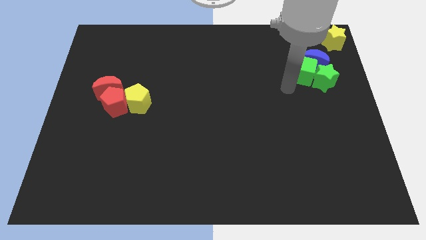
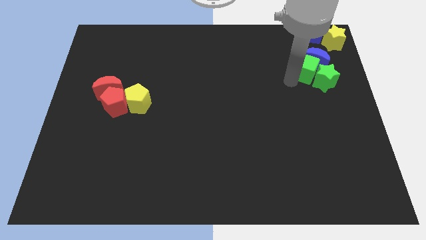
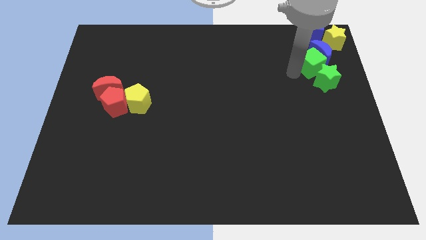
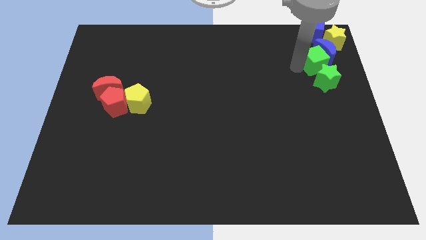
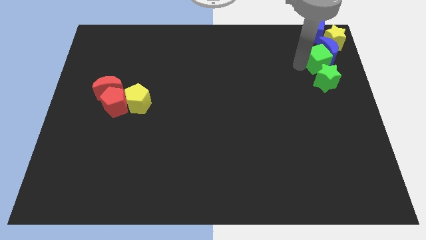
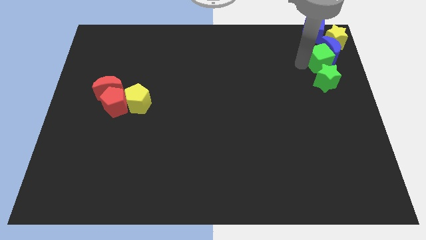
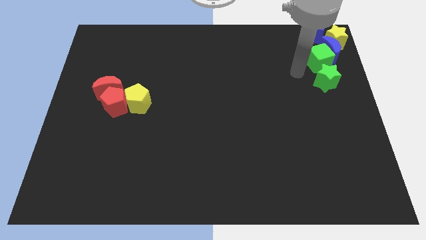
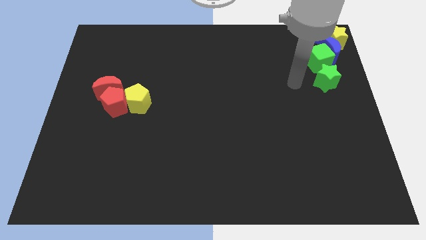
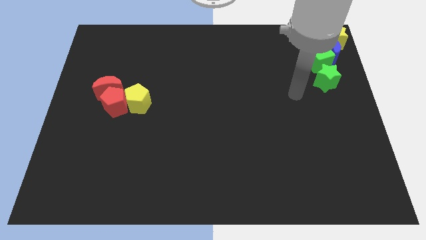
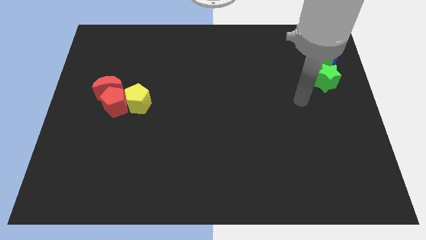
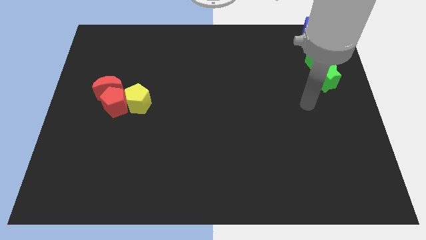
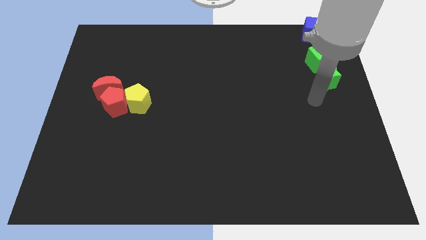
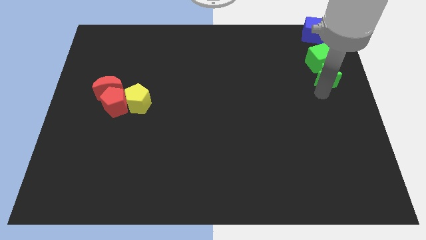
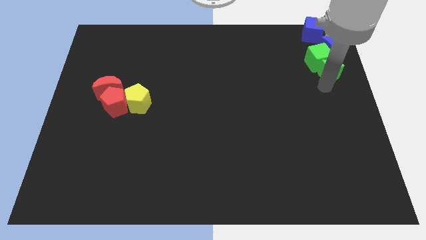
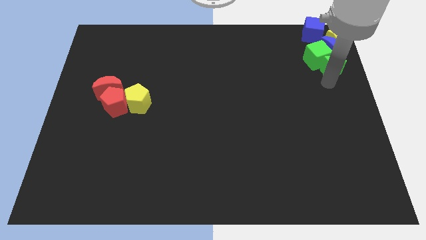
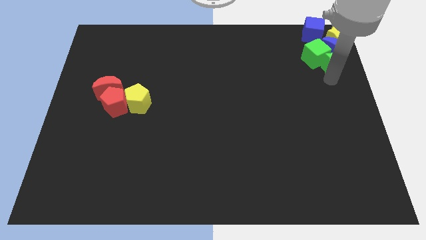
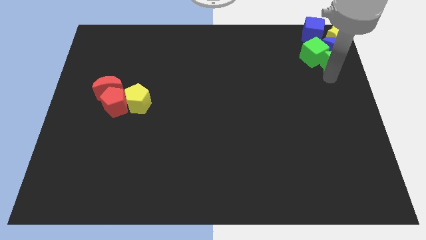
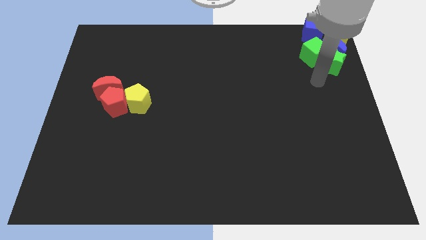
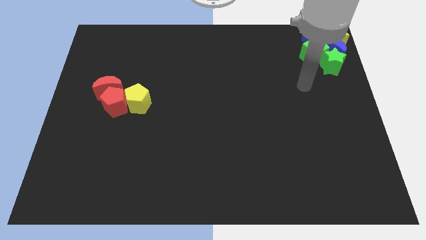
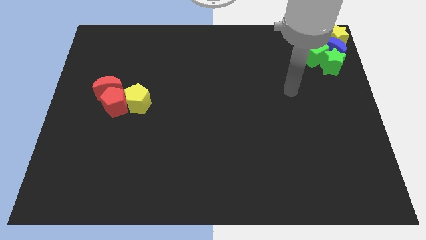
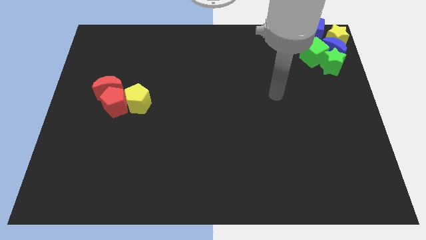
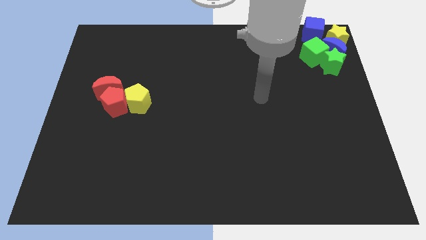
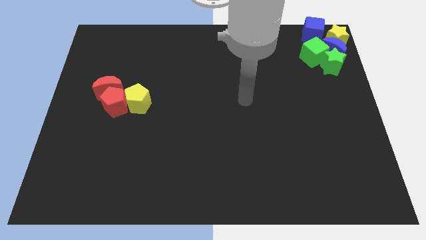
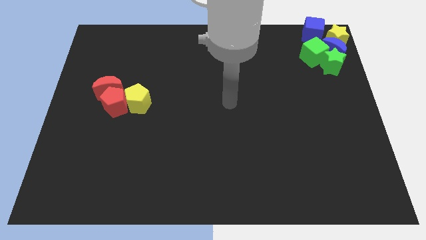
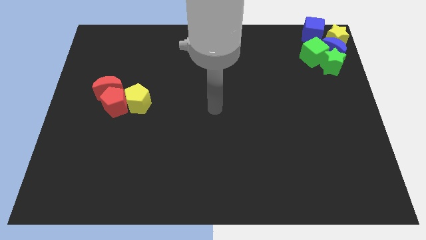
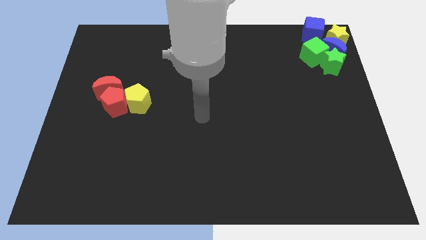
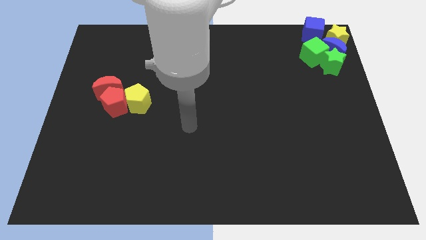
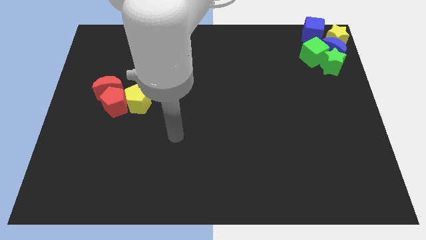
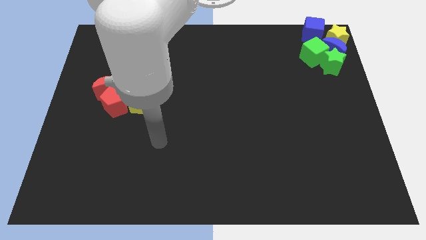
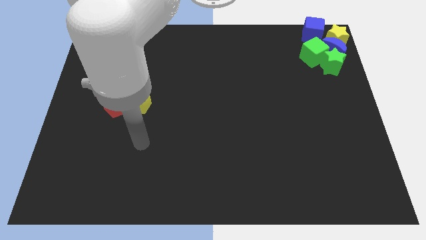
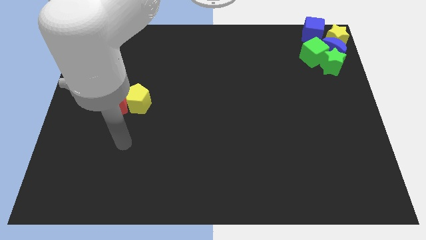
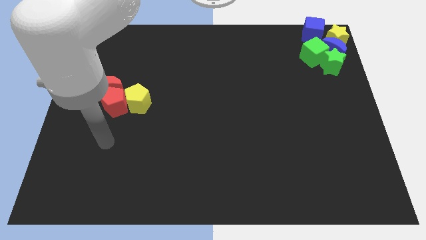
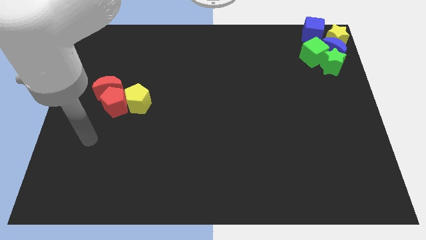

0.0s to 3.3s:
push the blue moon and green blocks into the group of blocks

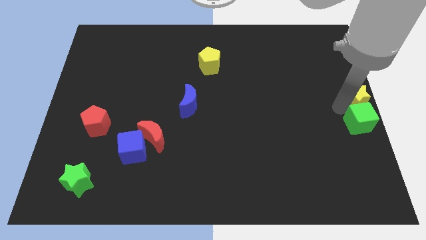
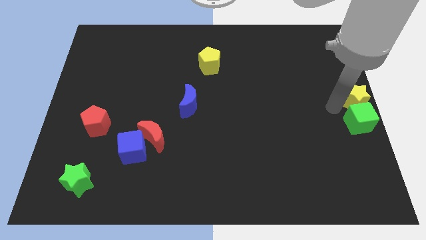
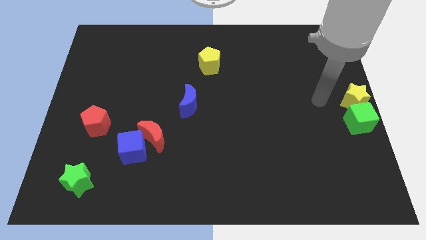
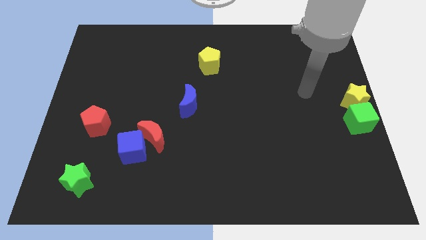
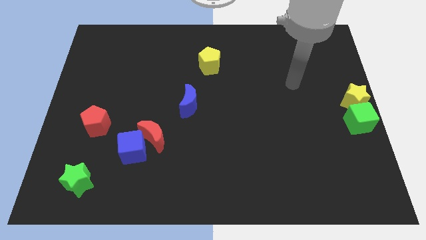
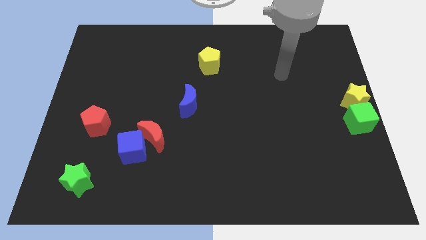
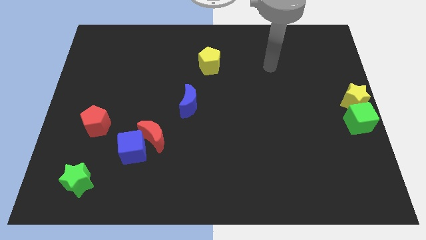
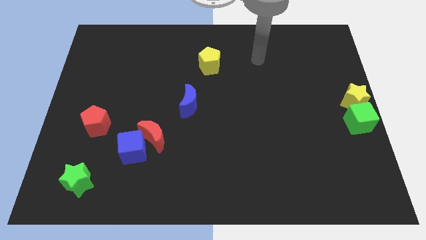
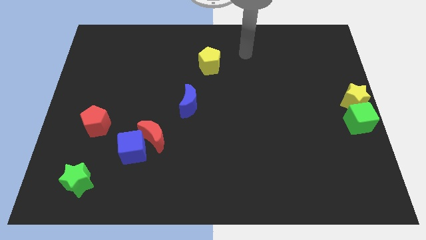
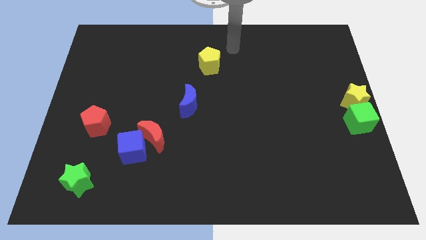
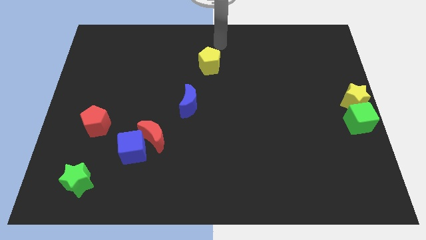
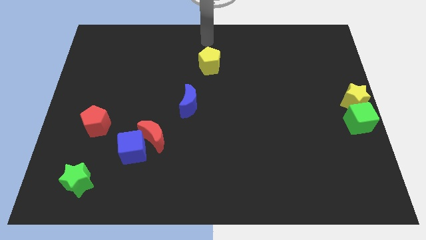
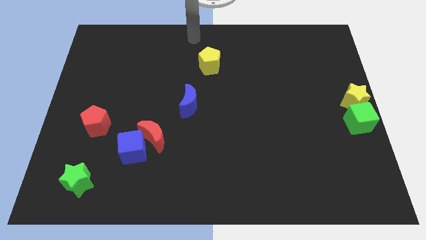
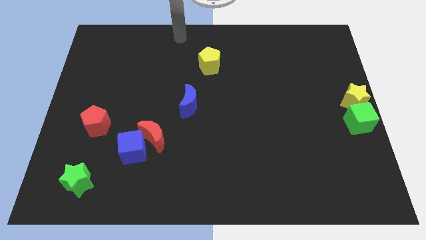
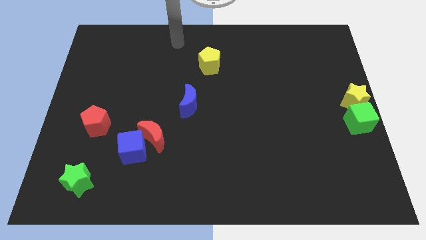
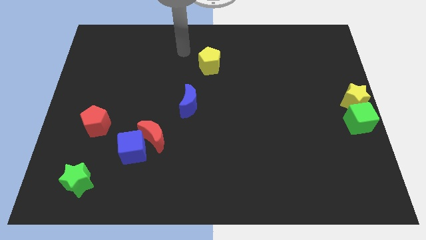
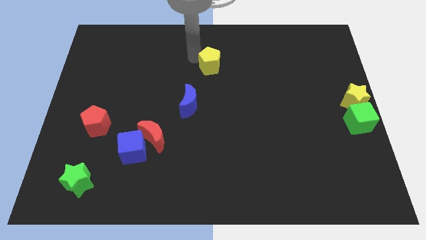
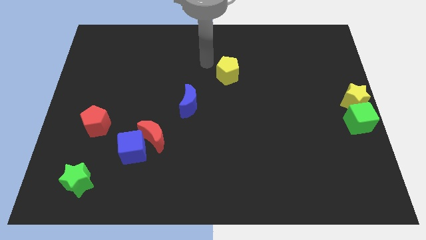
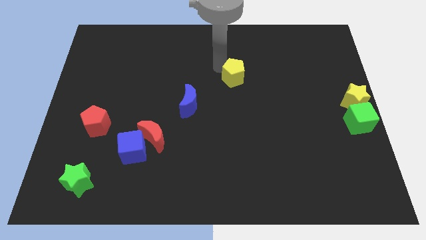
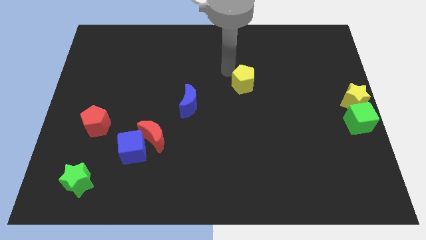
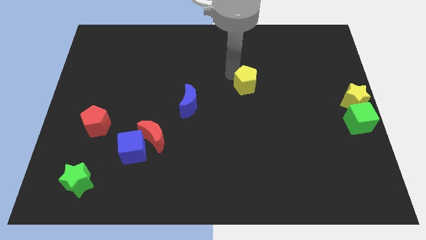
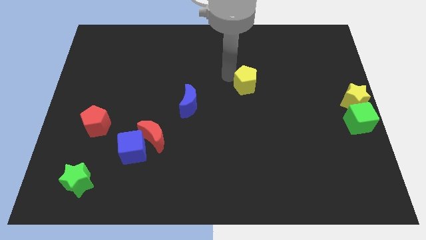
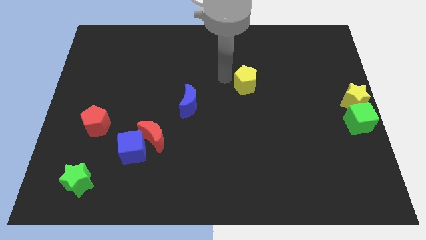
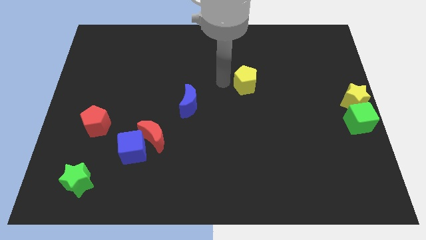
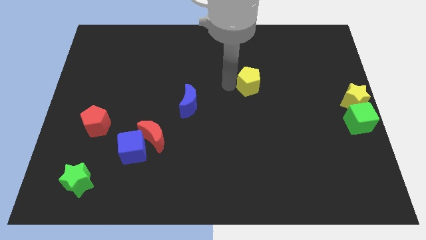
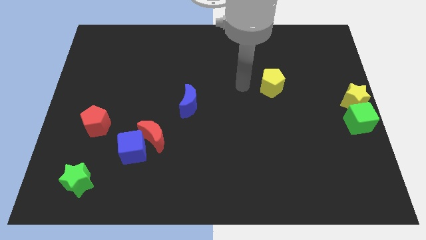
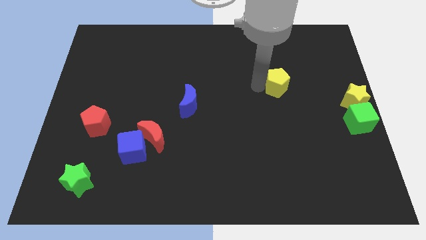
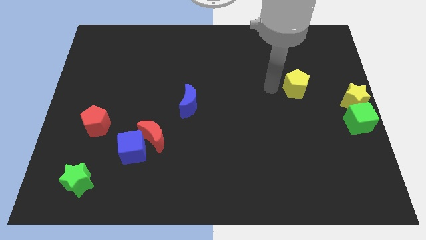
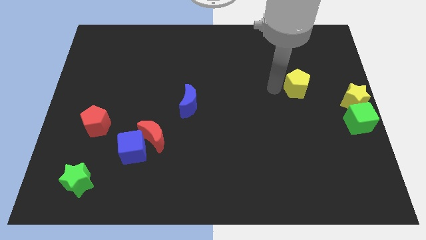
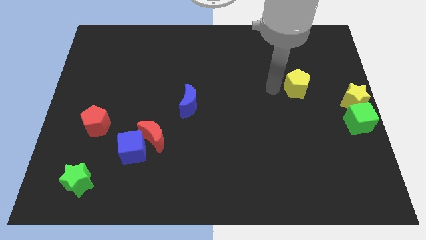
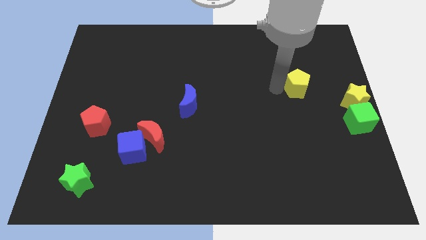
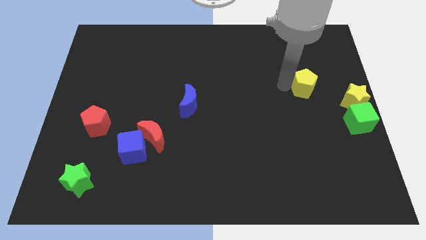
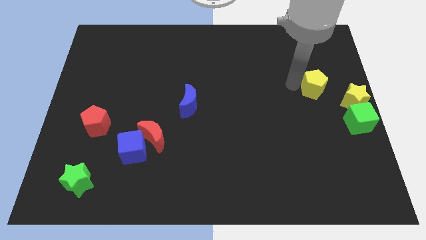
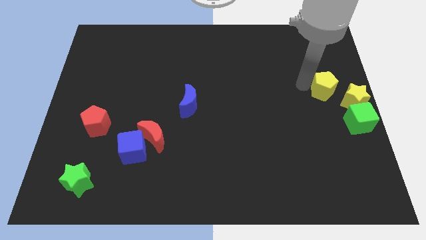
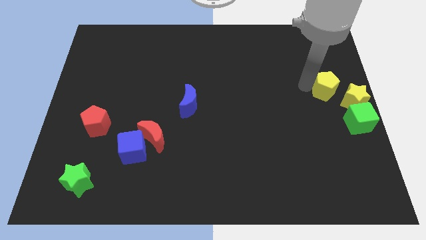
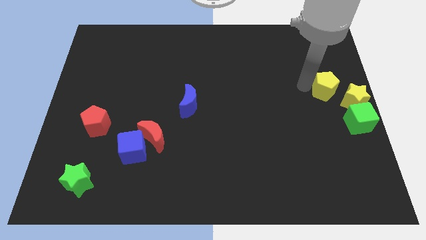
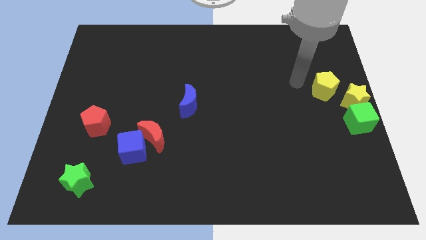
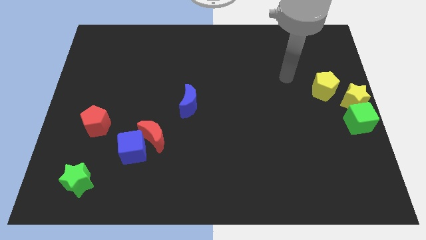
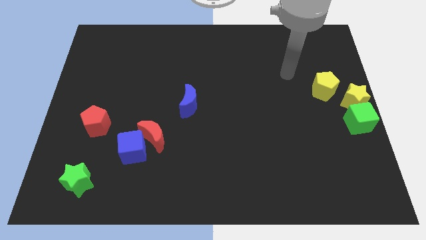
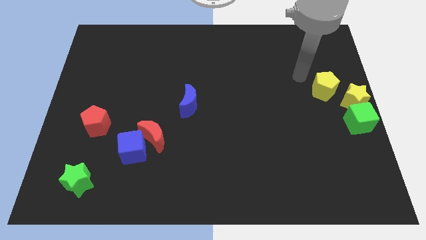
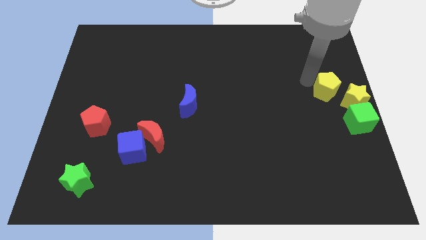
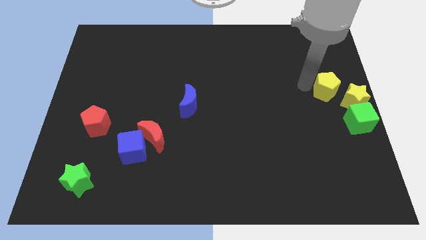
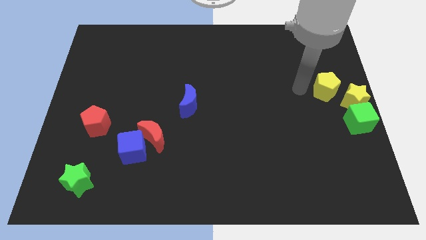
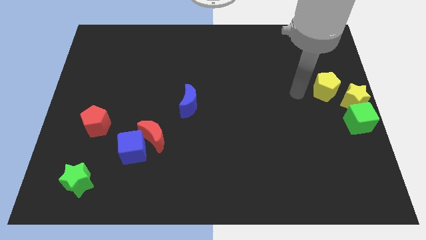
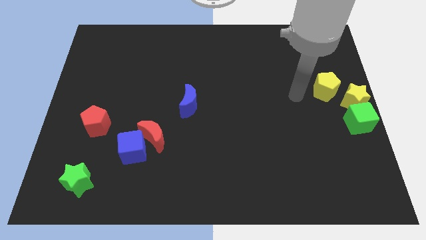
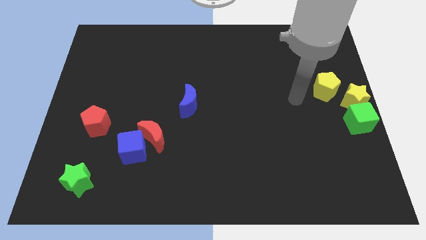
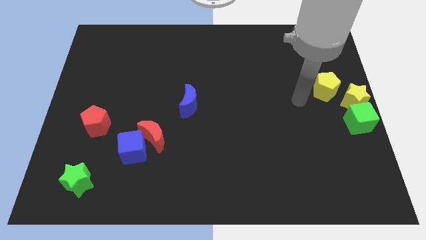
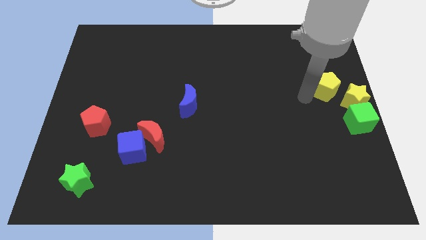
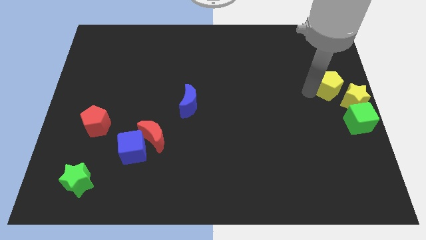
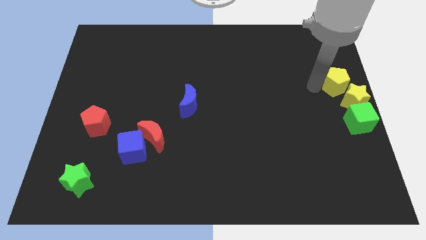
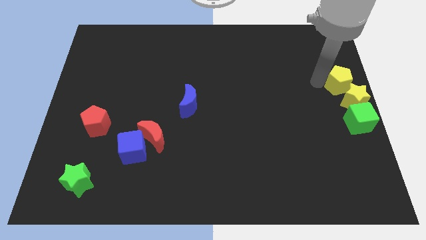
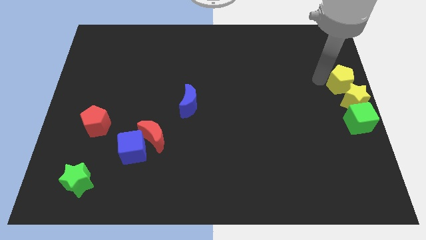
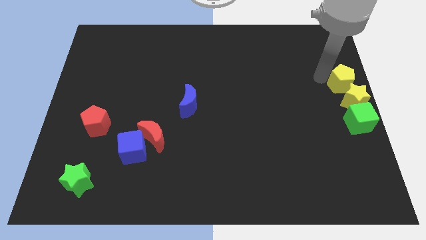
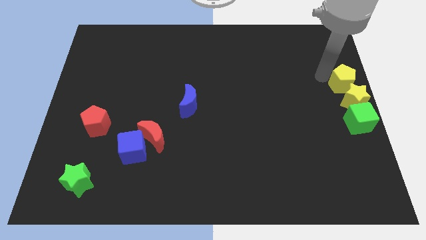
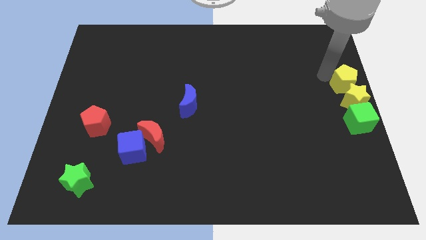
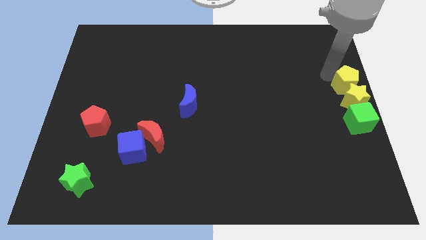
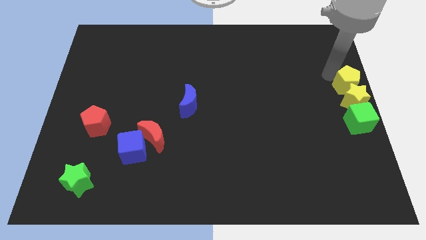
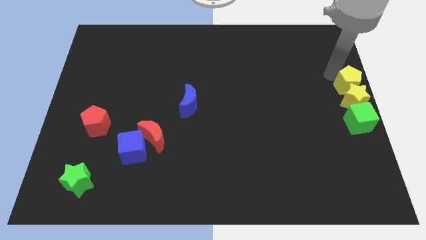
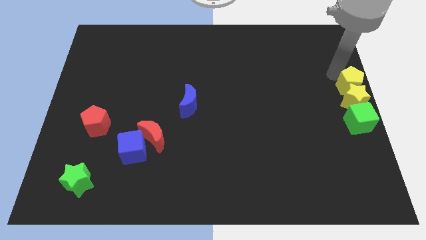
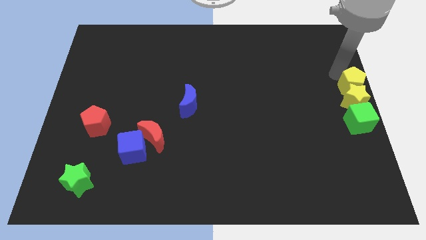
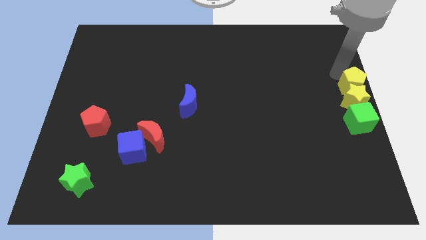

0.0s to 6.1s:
line up the yellow pentagon yellow star and green cube vertically
